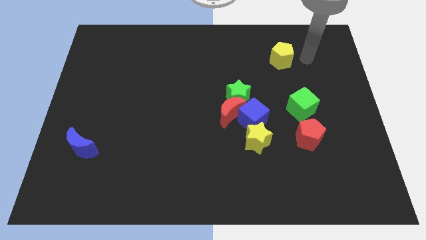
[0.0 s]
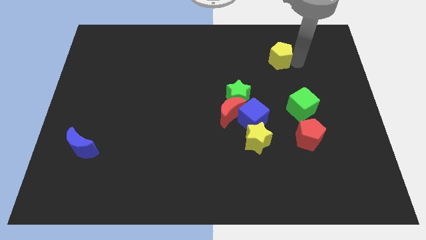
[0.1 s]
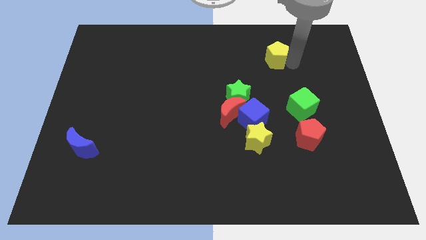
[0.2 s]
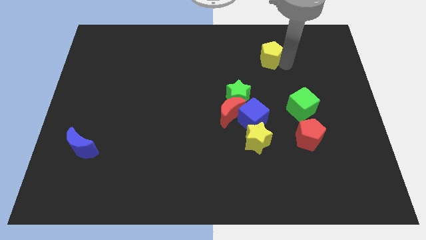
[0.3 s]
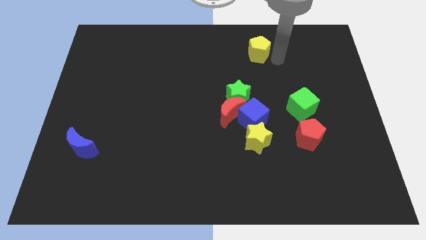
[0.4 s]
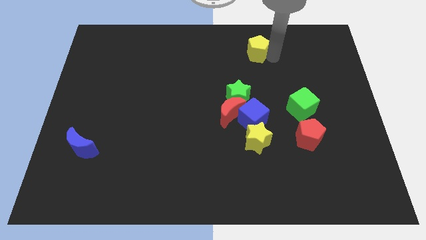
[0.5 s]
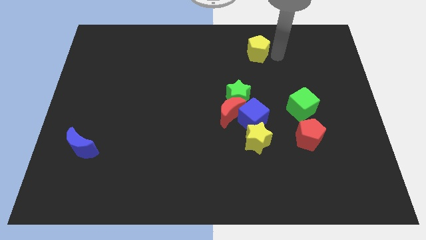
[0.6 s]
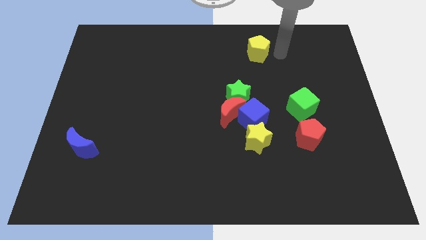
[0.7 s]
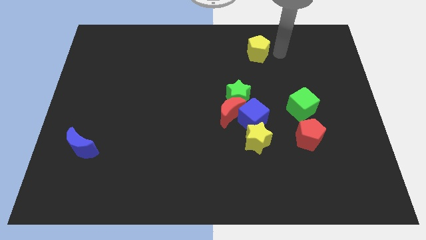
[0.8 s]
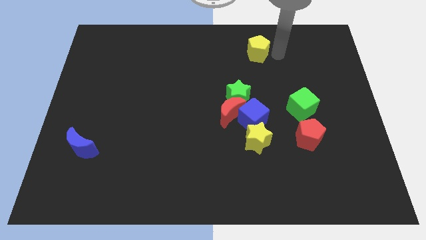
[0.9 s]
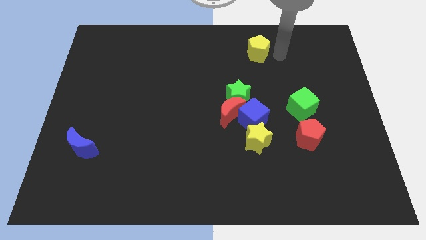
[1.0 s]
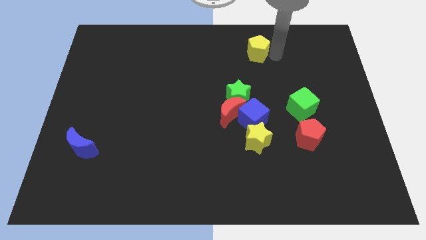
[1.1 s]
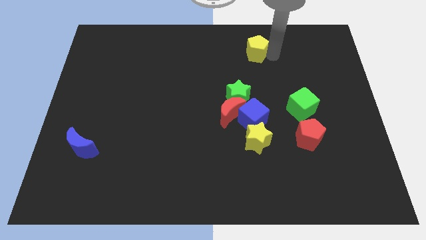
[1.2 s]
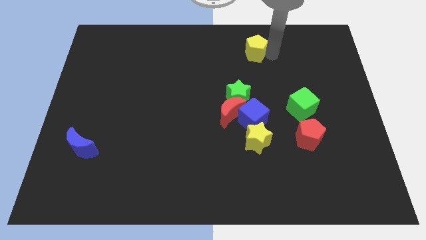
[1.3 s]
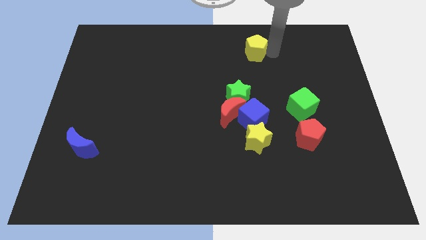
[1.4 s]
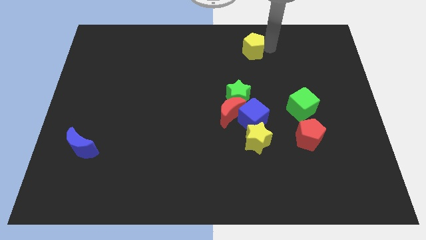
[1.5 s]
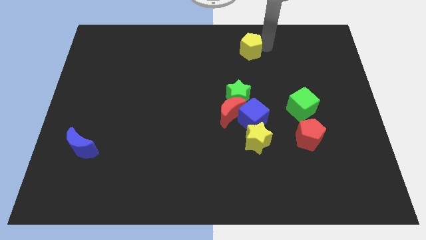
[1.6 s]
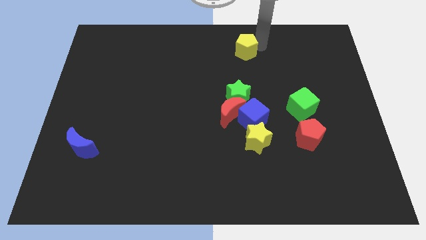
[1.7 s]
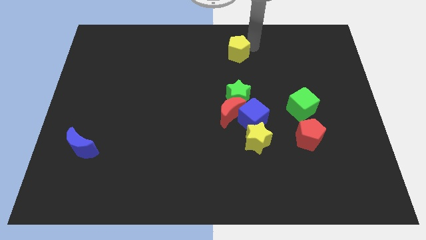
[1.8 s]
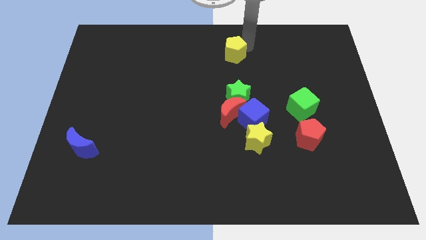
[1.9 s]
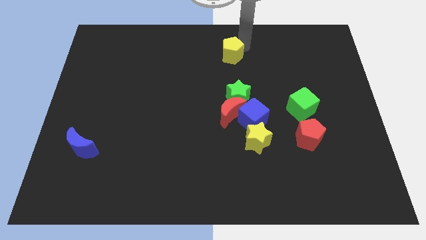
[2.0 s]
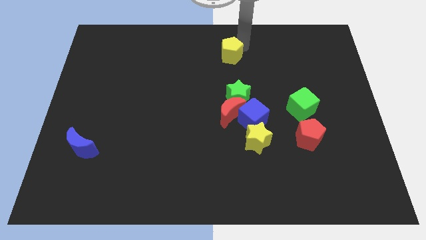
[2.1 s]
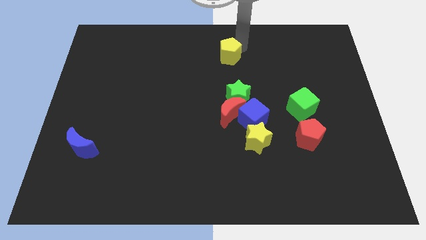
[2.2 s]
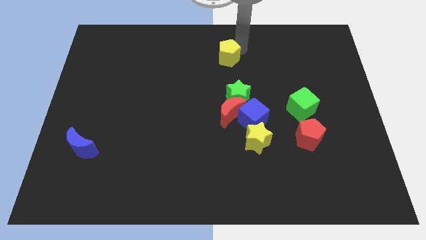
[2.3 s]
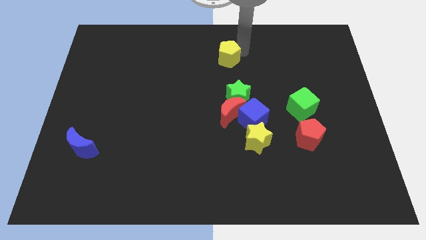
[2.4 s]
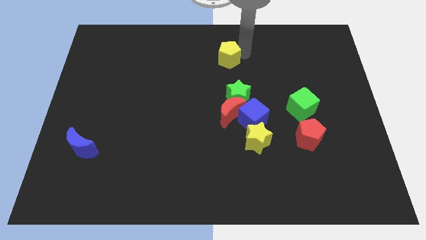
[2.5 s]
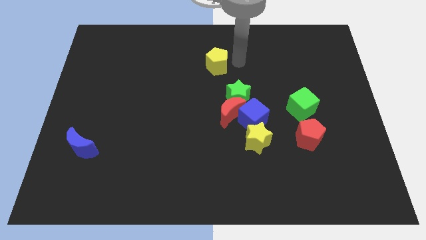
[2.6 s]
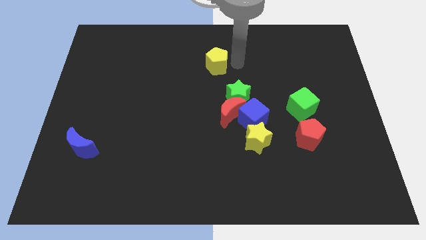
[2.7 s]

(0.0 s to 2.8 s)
place the yellow pentagon at the top left side of the green star

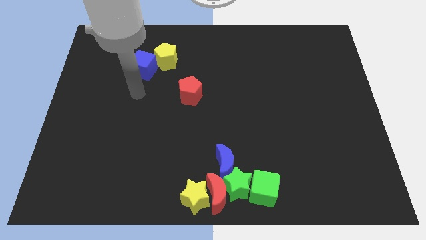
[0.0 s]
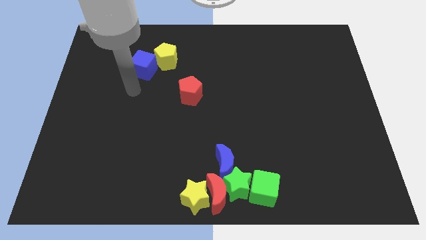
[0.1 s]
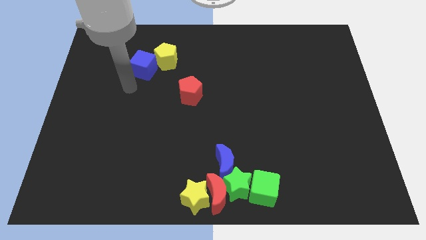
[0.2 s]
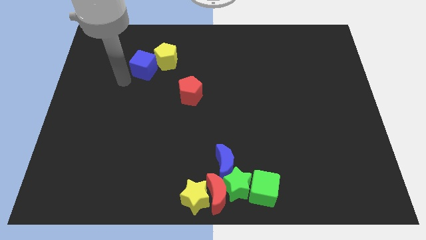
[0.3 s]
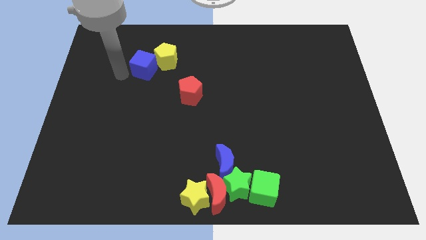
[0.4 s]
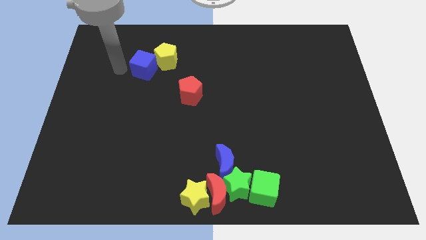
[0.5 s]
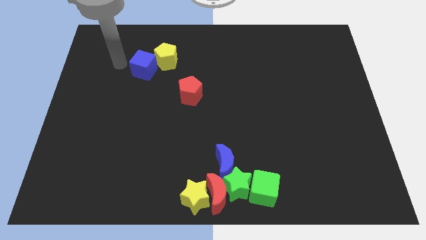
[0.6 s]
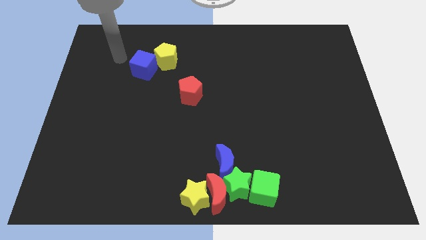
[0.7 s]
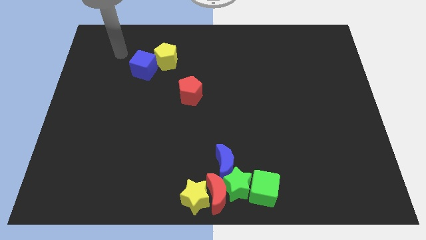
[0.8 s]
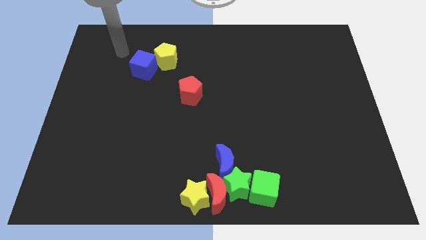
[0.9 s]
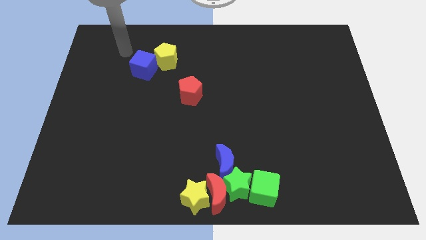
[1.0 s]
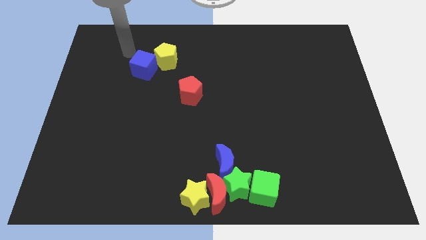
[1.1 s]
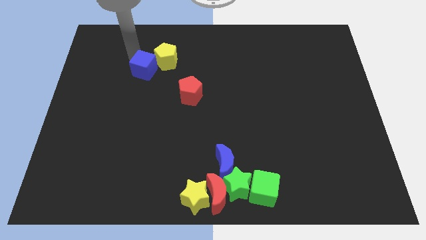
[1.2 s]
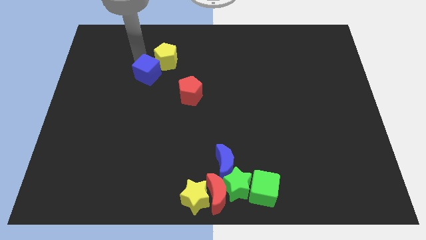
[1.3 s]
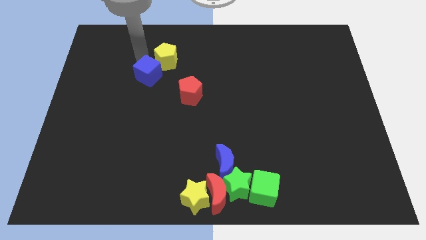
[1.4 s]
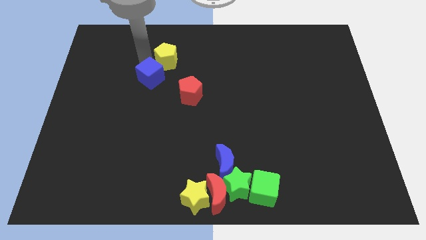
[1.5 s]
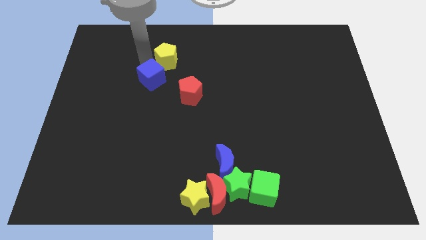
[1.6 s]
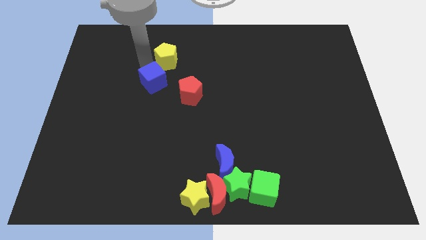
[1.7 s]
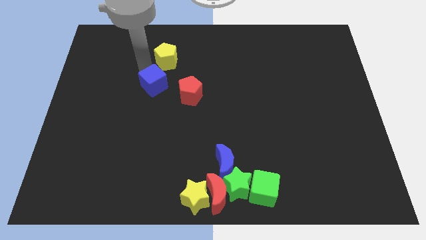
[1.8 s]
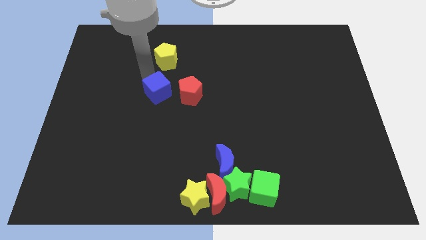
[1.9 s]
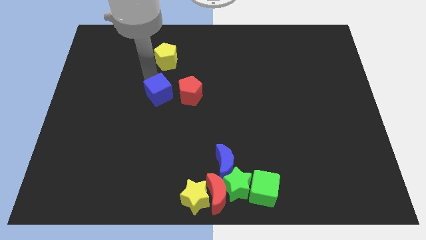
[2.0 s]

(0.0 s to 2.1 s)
push the blue cube to the left side of the red pentagon

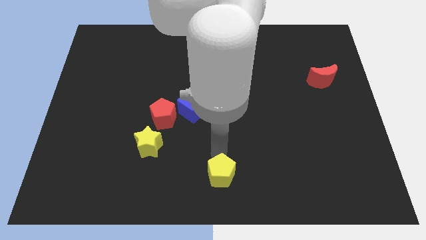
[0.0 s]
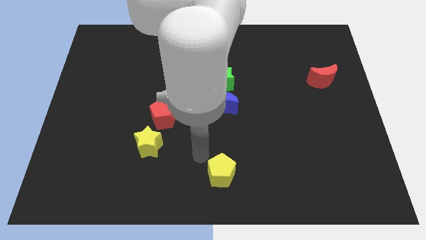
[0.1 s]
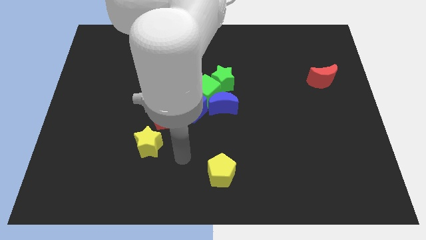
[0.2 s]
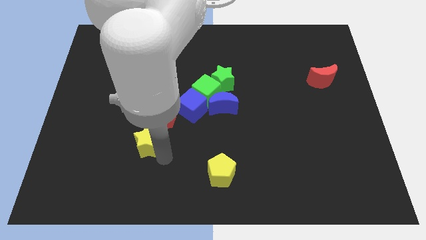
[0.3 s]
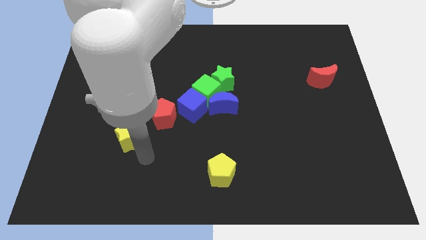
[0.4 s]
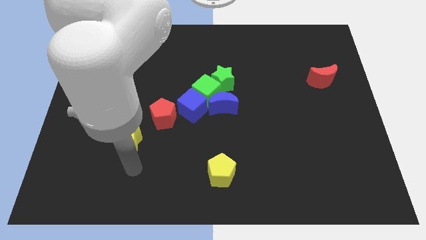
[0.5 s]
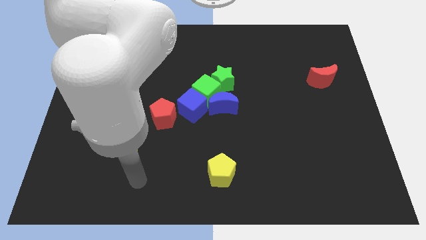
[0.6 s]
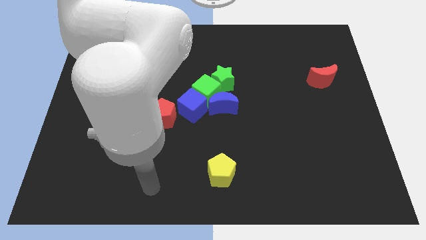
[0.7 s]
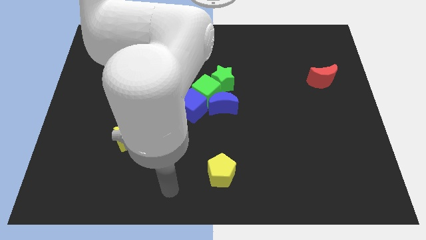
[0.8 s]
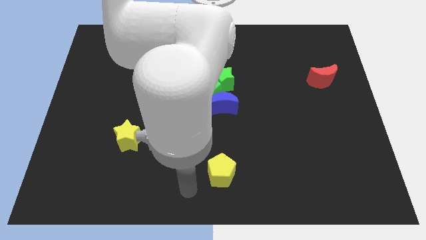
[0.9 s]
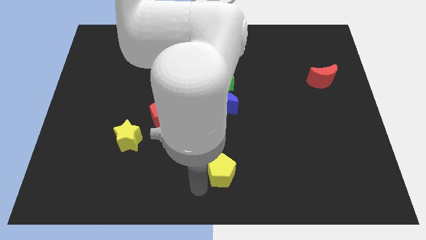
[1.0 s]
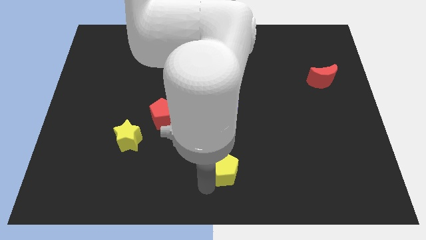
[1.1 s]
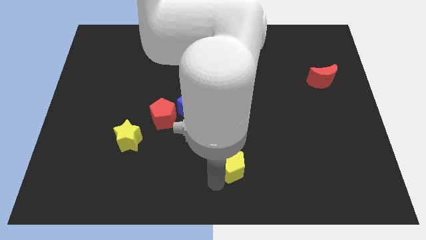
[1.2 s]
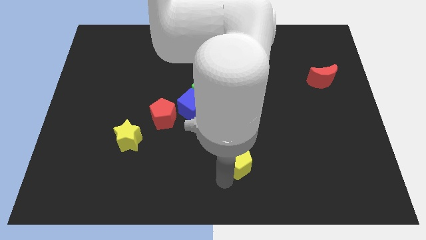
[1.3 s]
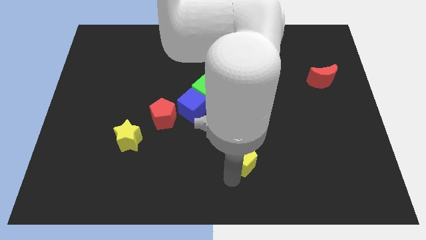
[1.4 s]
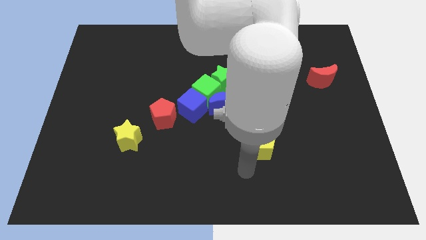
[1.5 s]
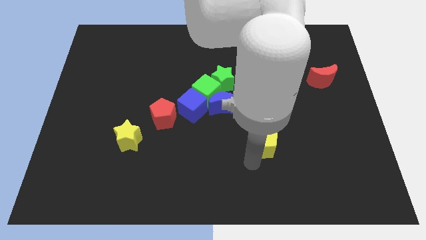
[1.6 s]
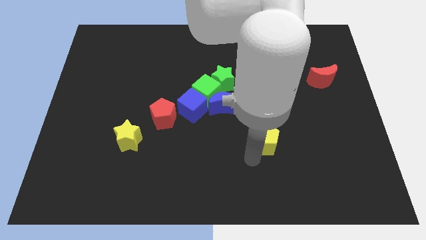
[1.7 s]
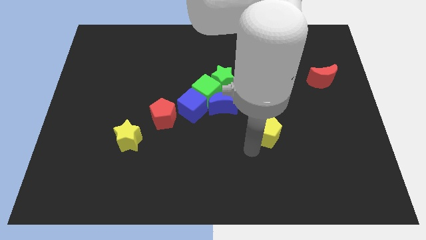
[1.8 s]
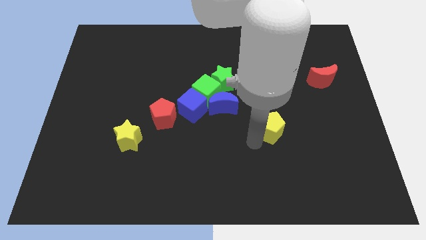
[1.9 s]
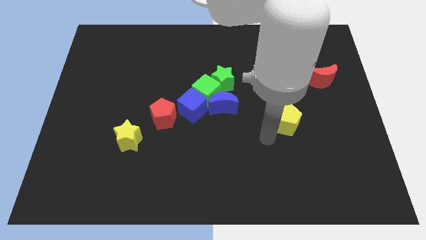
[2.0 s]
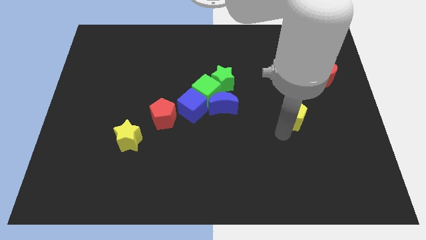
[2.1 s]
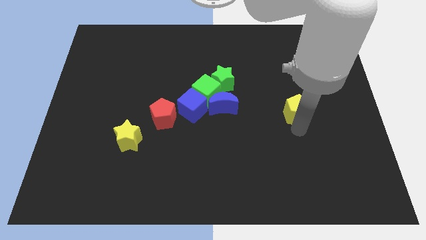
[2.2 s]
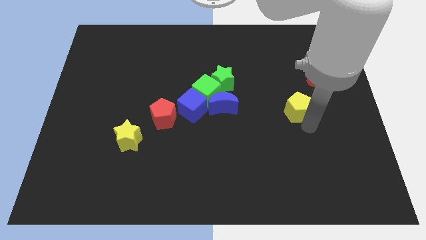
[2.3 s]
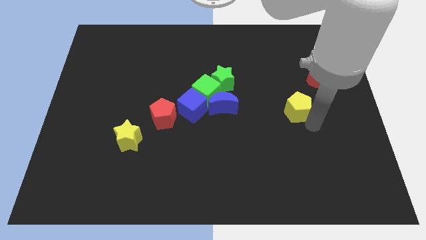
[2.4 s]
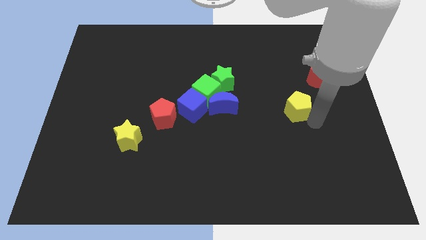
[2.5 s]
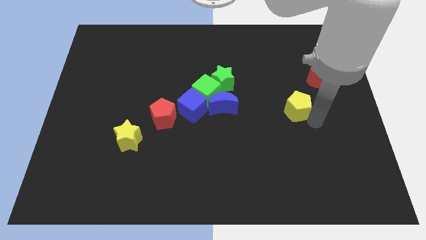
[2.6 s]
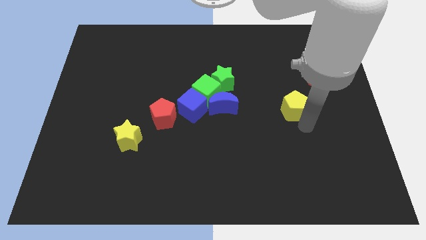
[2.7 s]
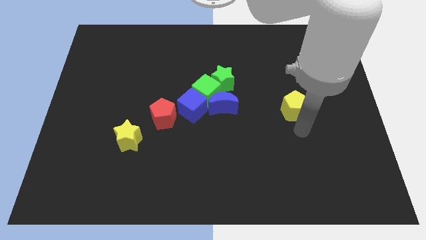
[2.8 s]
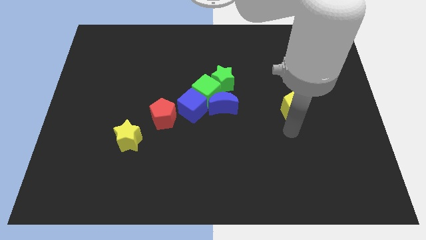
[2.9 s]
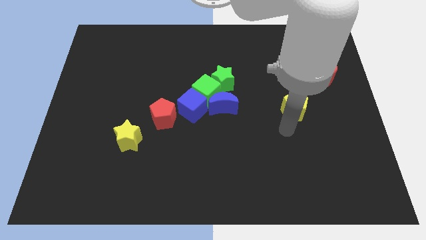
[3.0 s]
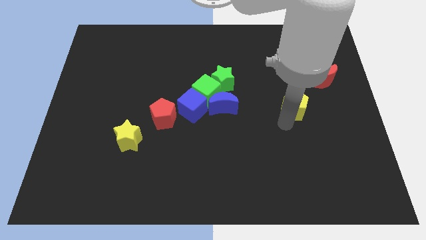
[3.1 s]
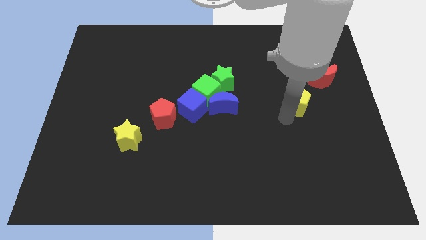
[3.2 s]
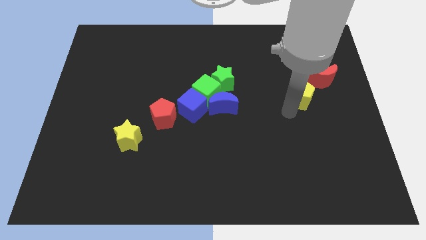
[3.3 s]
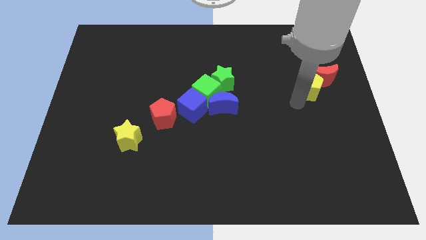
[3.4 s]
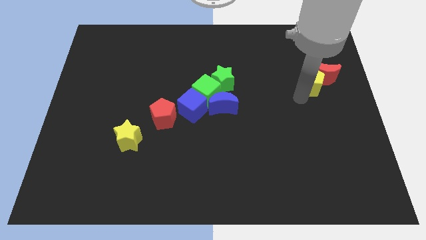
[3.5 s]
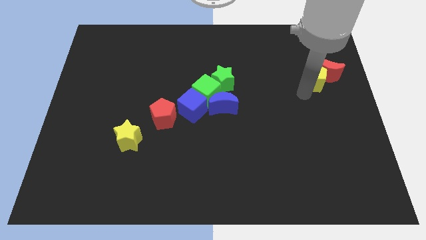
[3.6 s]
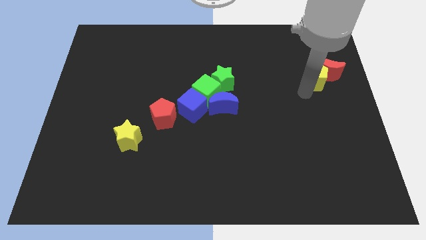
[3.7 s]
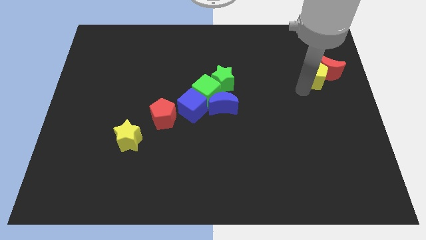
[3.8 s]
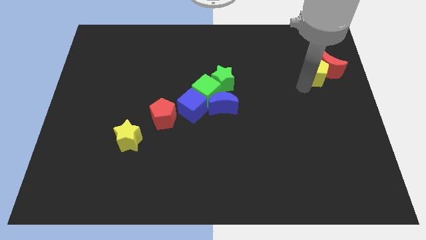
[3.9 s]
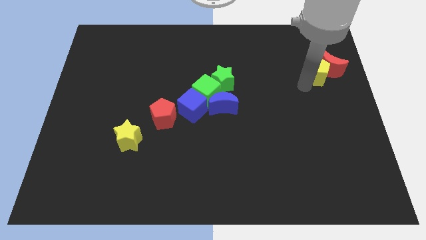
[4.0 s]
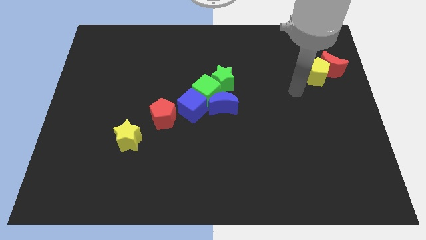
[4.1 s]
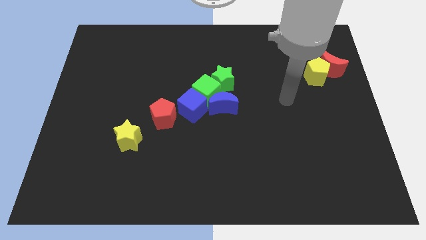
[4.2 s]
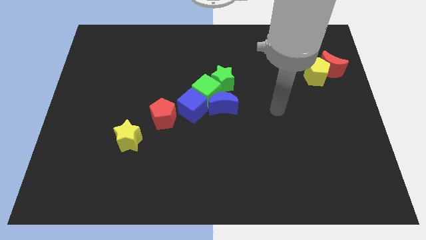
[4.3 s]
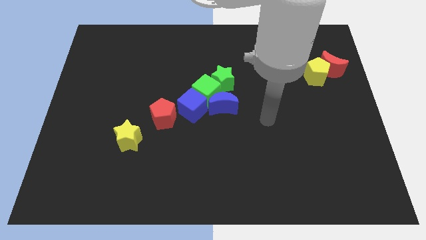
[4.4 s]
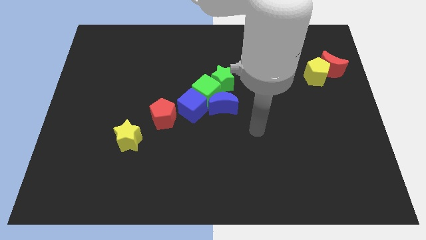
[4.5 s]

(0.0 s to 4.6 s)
push the yellow pentagon into the red crescent
